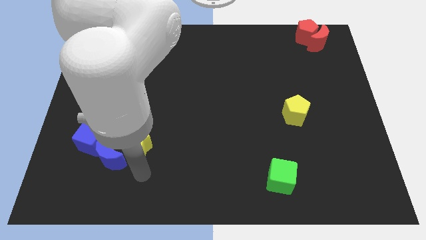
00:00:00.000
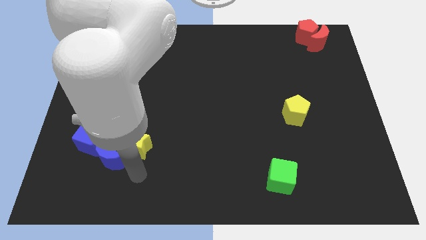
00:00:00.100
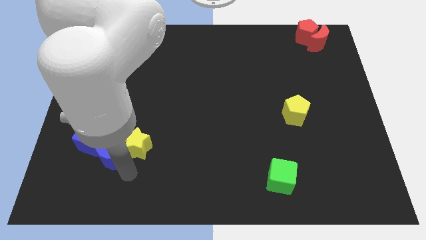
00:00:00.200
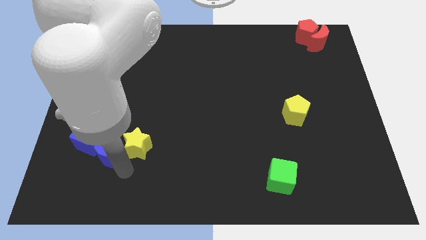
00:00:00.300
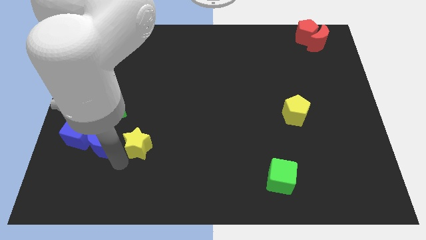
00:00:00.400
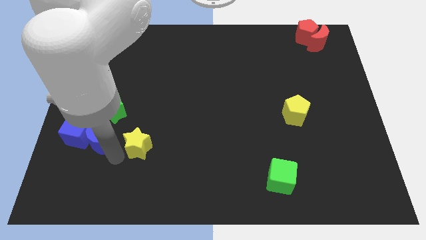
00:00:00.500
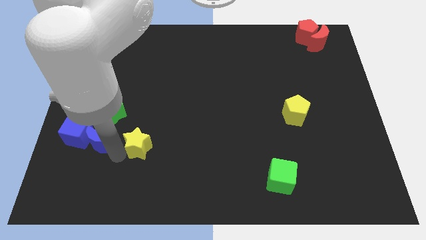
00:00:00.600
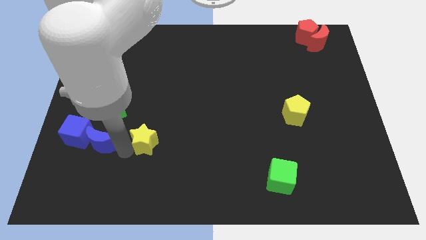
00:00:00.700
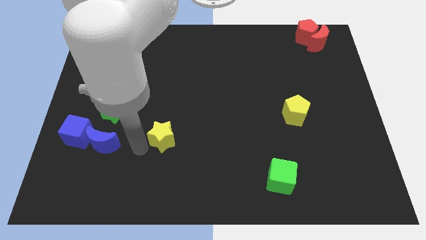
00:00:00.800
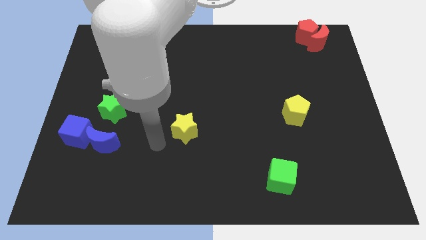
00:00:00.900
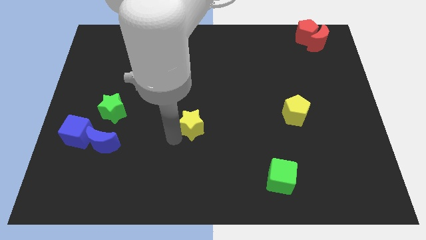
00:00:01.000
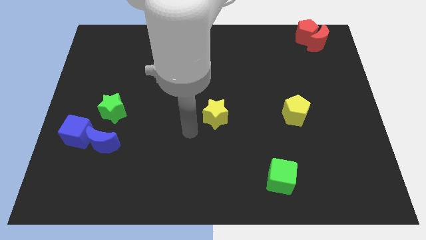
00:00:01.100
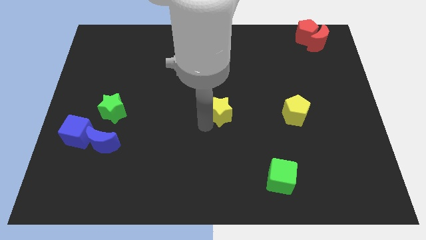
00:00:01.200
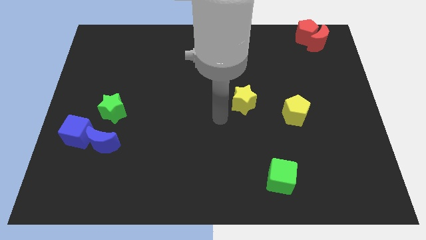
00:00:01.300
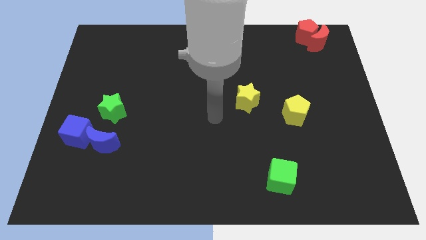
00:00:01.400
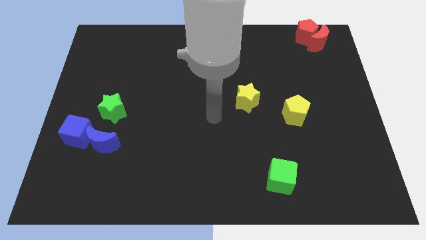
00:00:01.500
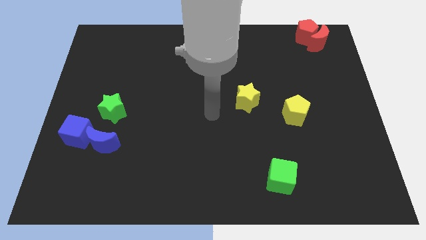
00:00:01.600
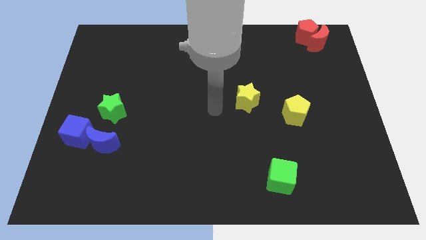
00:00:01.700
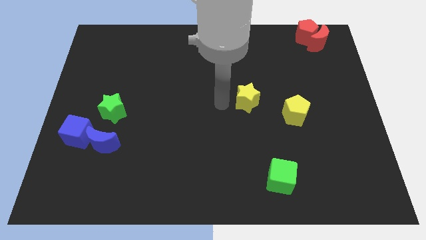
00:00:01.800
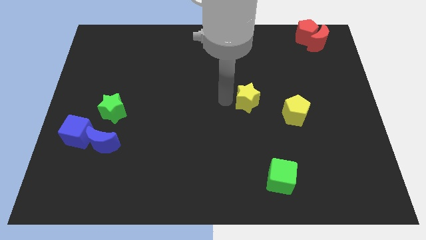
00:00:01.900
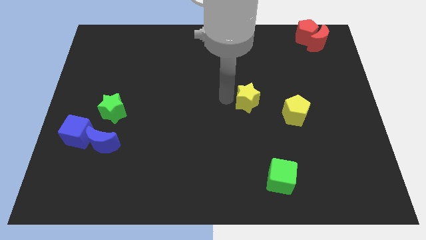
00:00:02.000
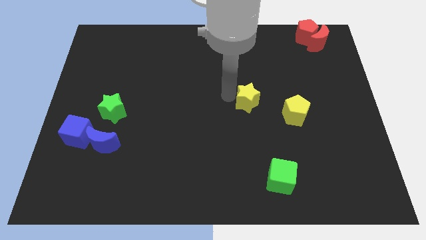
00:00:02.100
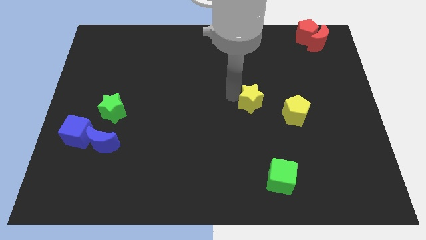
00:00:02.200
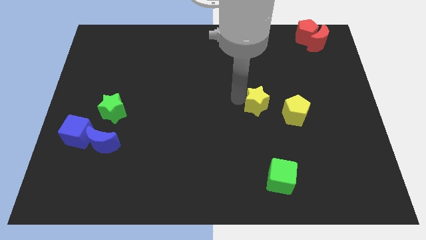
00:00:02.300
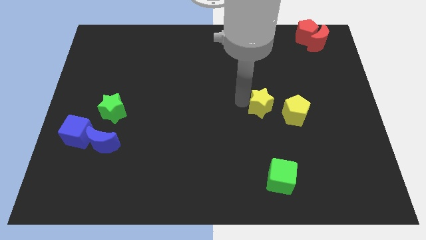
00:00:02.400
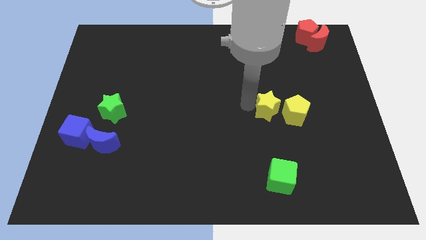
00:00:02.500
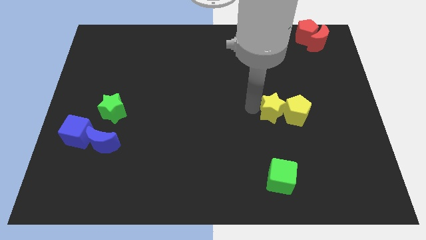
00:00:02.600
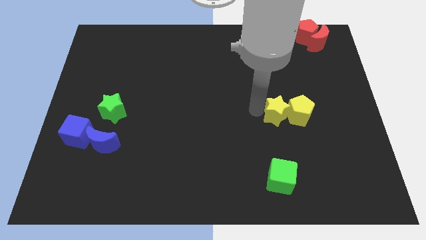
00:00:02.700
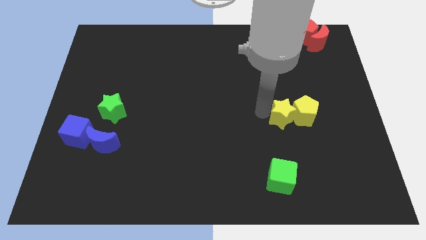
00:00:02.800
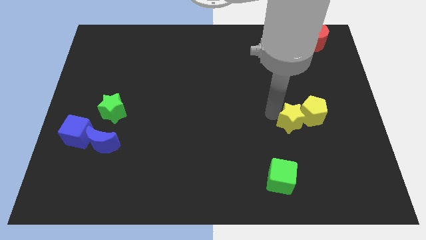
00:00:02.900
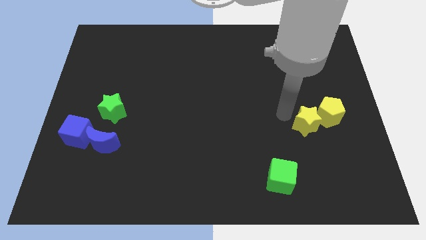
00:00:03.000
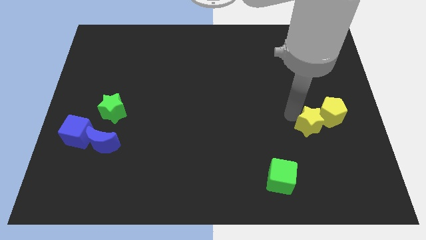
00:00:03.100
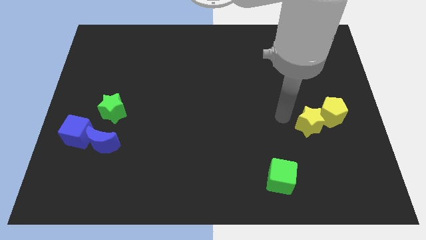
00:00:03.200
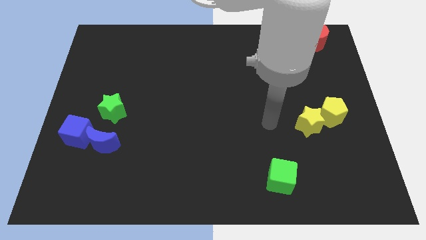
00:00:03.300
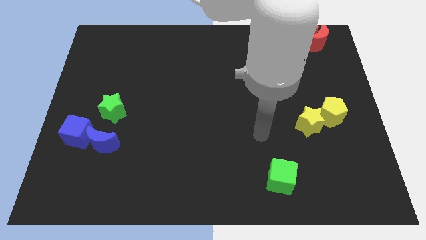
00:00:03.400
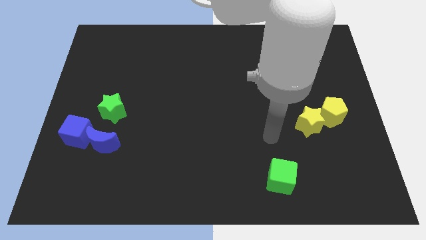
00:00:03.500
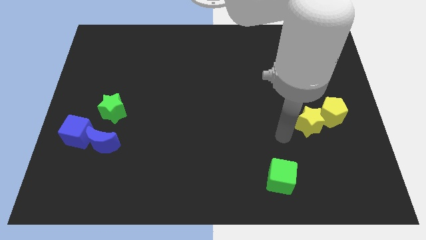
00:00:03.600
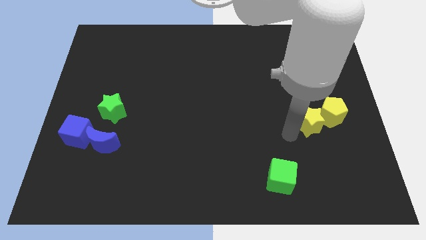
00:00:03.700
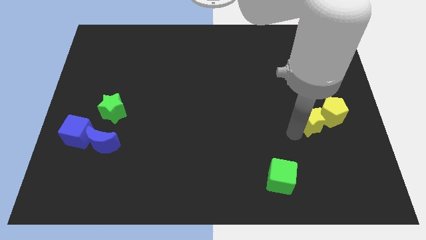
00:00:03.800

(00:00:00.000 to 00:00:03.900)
push the yellow star along with yellow pentagon to the right center of the board

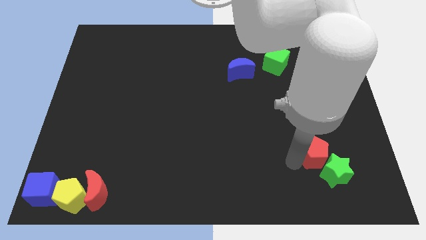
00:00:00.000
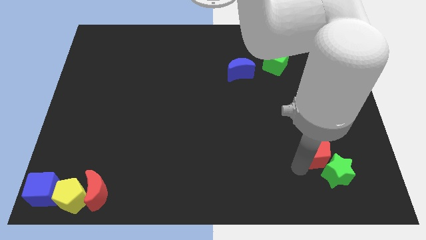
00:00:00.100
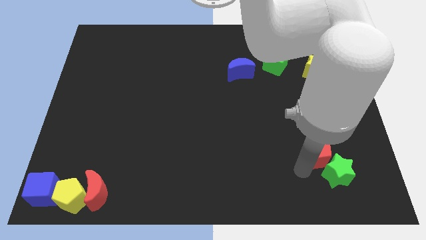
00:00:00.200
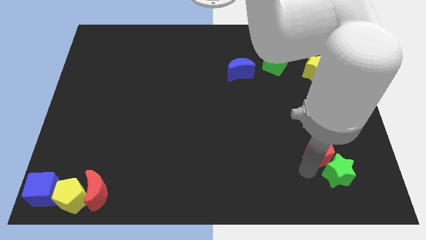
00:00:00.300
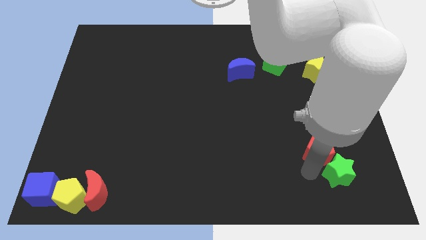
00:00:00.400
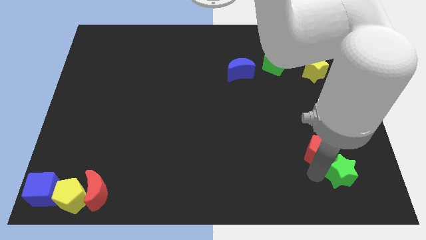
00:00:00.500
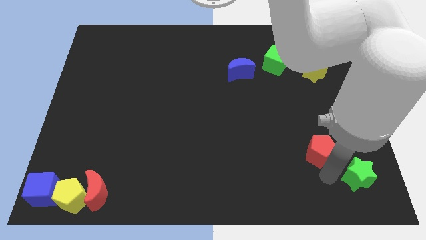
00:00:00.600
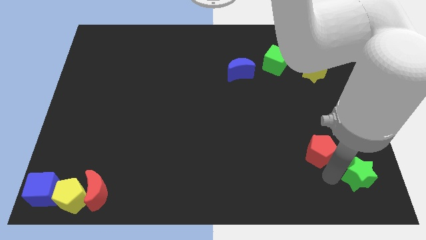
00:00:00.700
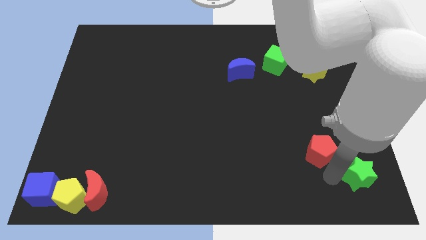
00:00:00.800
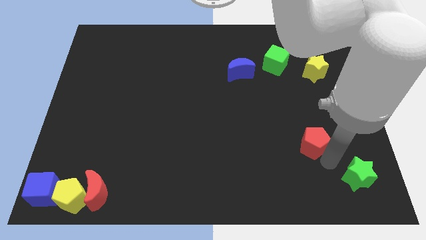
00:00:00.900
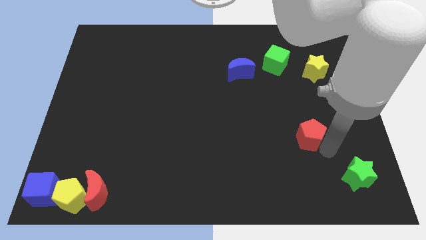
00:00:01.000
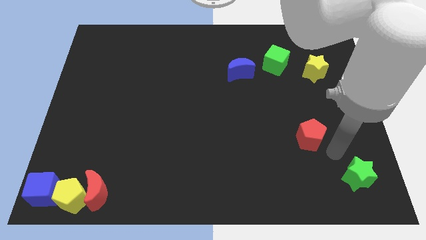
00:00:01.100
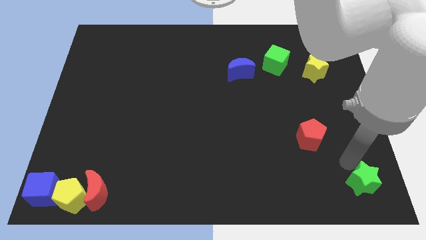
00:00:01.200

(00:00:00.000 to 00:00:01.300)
separate the red pentagon and green star

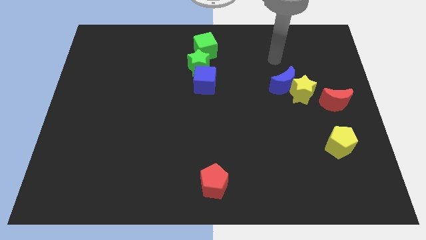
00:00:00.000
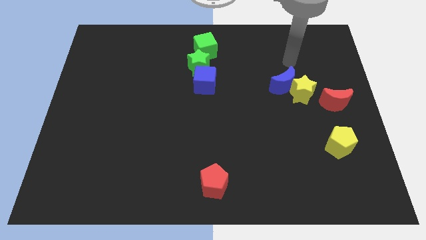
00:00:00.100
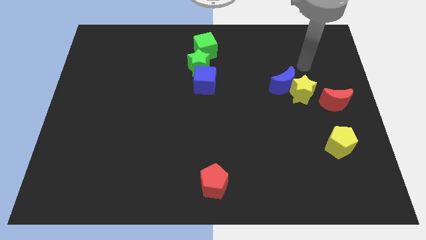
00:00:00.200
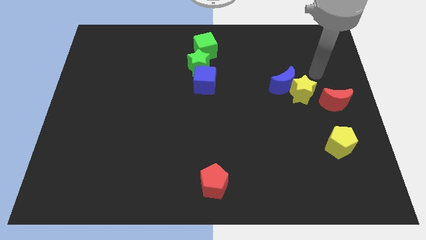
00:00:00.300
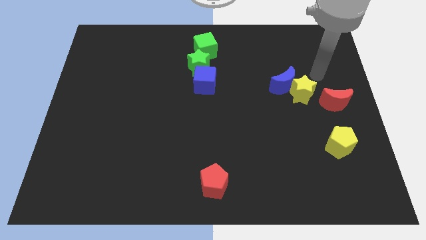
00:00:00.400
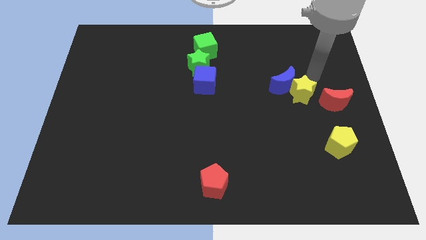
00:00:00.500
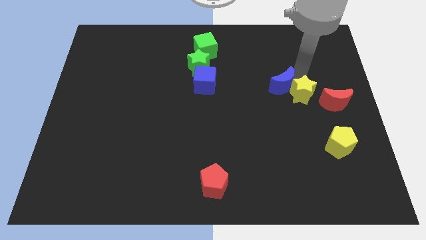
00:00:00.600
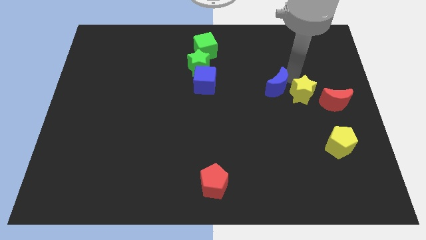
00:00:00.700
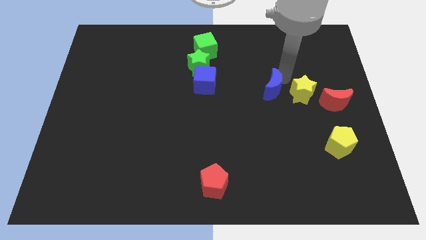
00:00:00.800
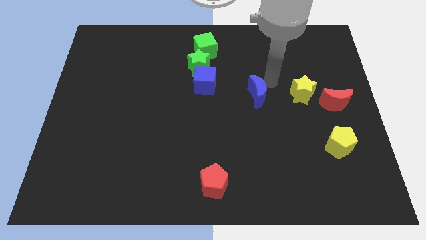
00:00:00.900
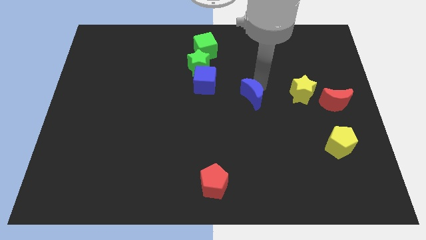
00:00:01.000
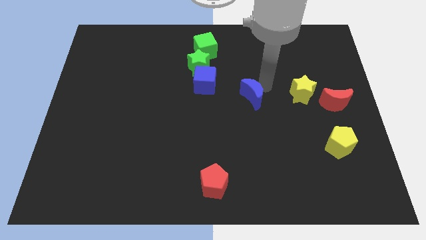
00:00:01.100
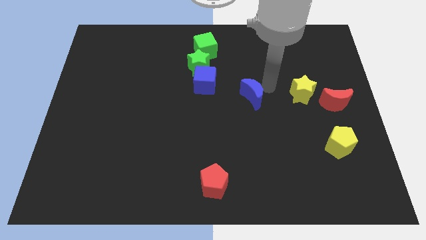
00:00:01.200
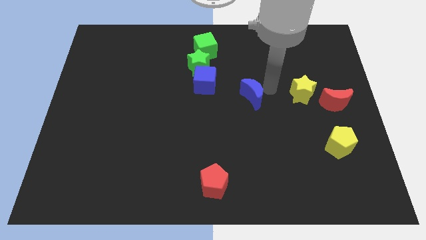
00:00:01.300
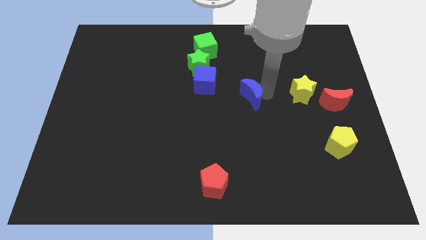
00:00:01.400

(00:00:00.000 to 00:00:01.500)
separate the blue moon from the yellow star

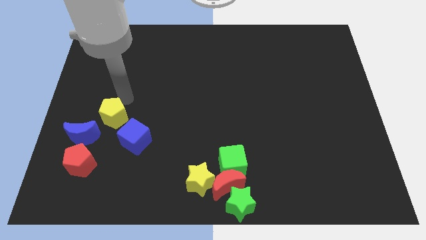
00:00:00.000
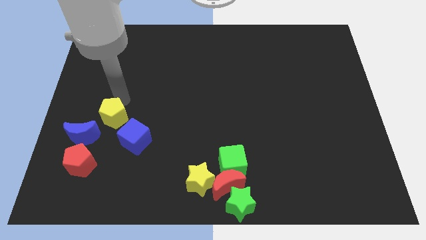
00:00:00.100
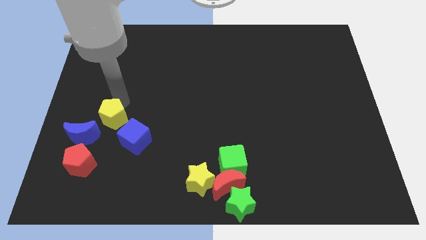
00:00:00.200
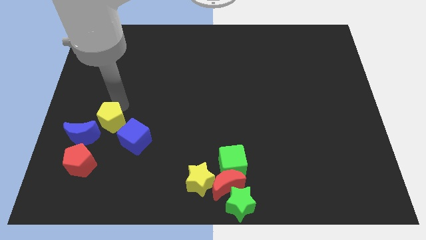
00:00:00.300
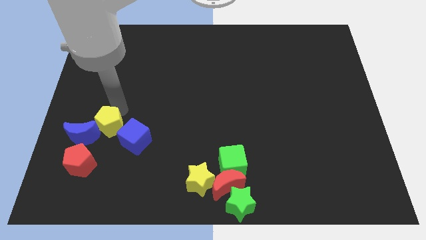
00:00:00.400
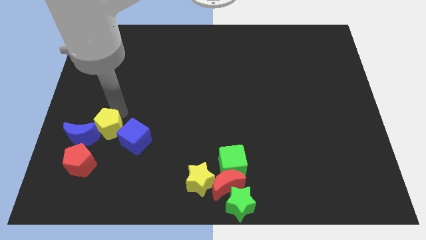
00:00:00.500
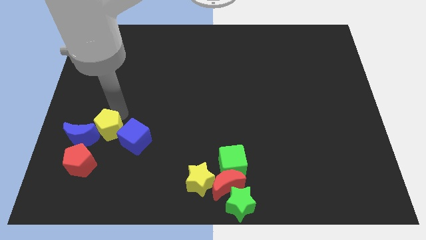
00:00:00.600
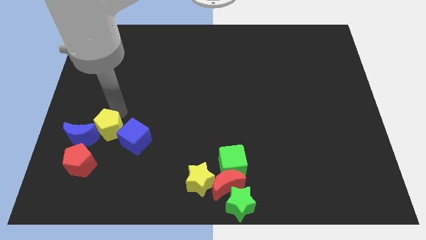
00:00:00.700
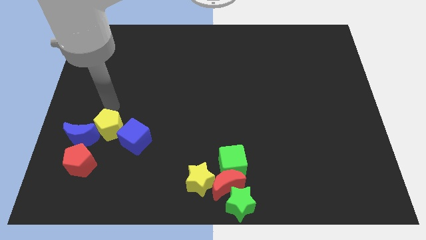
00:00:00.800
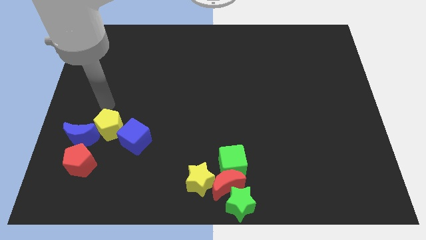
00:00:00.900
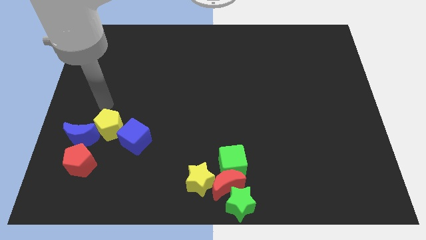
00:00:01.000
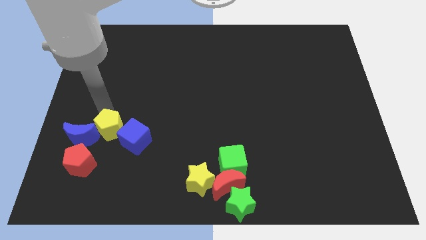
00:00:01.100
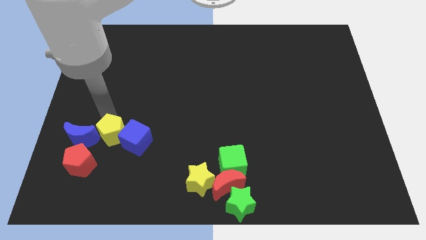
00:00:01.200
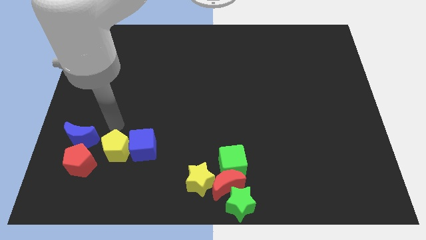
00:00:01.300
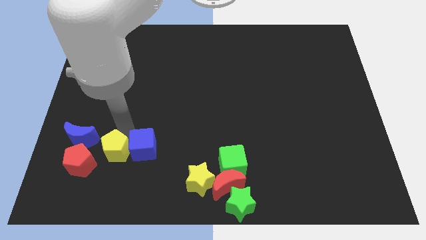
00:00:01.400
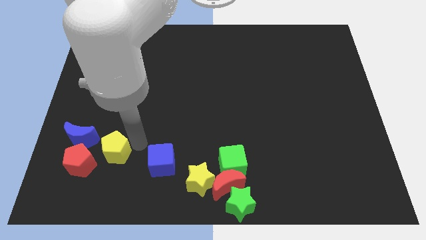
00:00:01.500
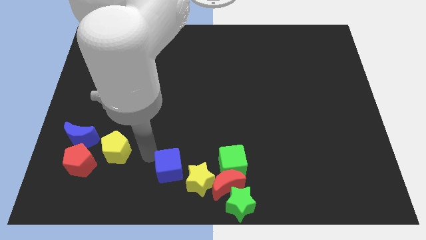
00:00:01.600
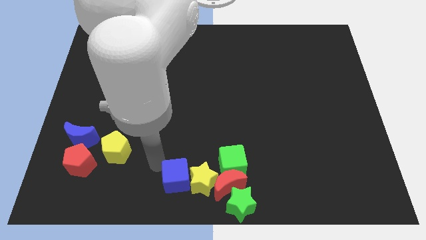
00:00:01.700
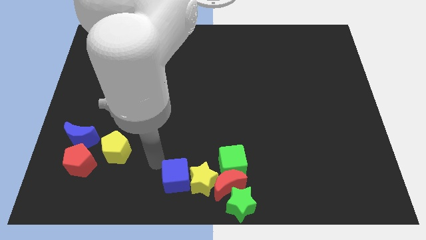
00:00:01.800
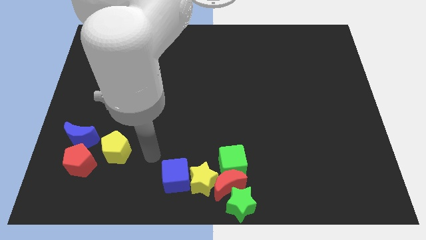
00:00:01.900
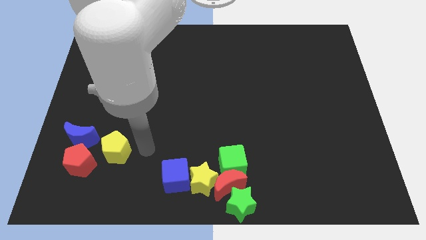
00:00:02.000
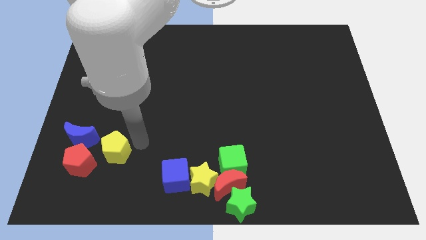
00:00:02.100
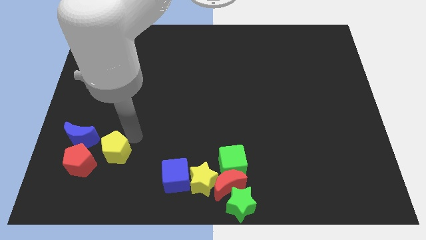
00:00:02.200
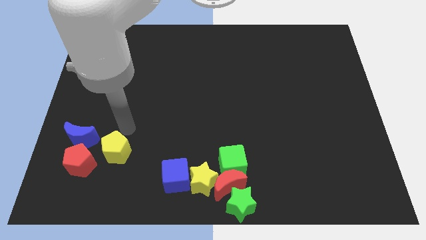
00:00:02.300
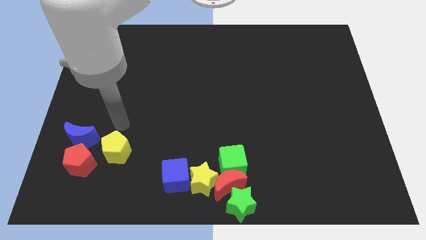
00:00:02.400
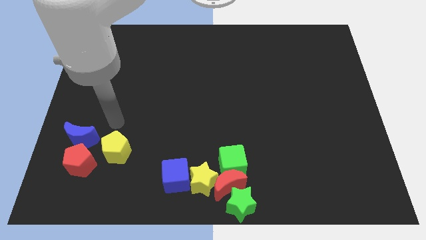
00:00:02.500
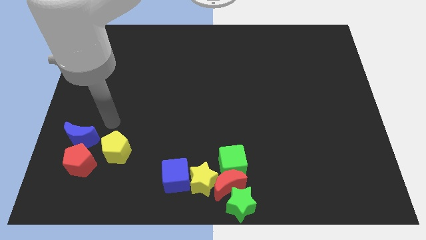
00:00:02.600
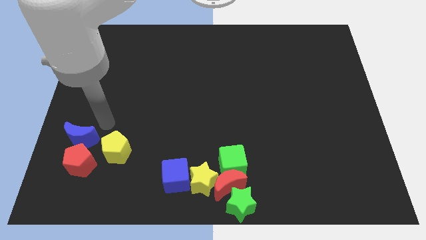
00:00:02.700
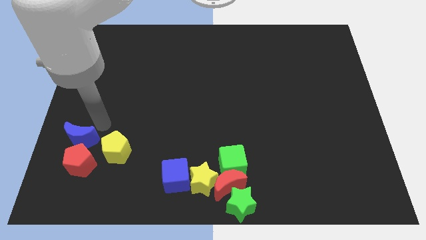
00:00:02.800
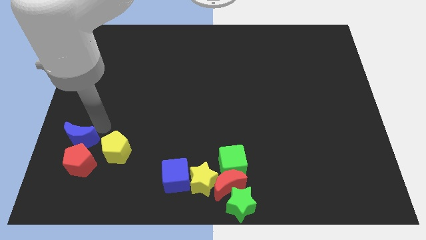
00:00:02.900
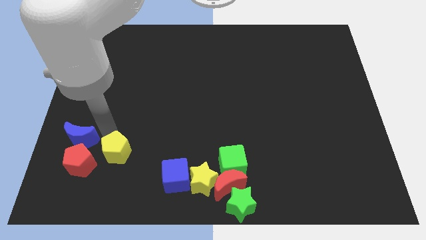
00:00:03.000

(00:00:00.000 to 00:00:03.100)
move the blue cube to the left of the yellow star
